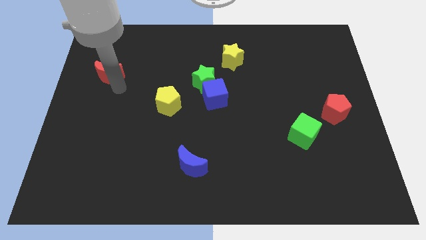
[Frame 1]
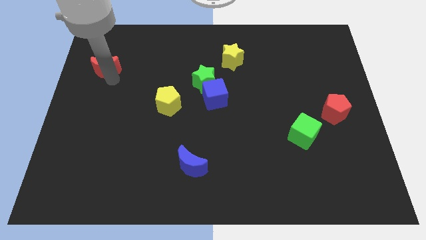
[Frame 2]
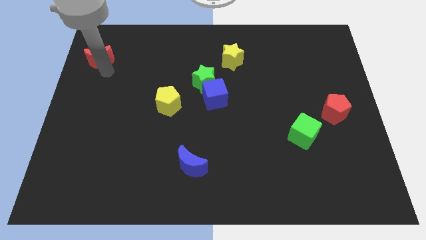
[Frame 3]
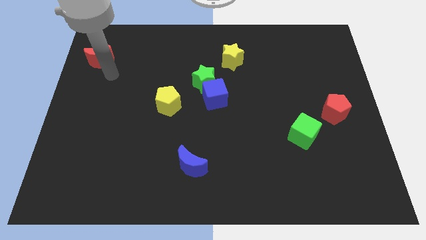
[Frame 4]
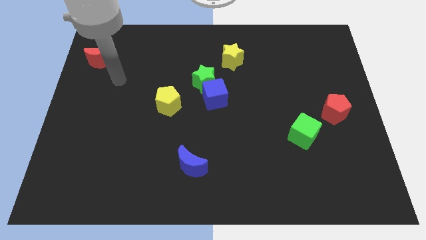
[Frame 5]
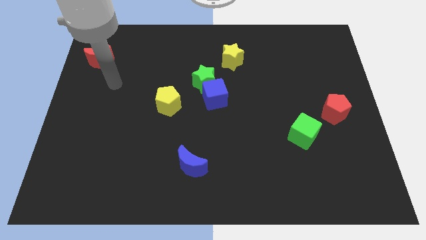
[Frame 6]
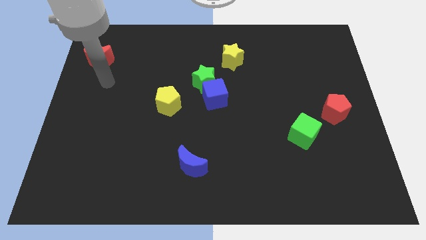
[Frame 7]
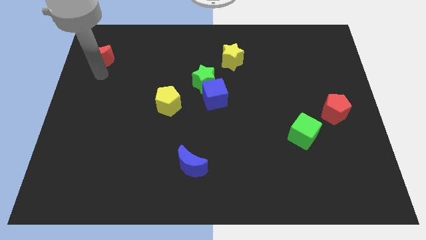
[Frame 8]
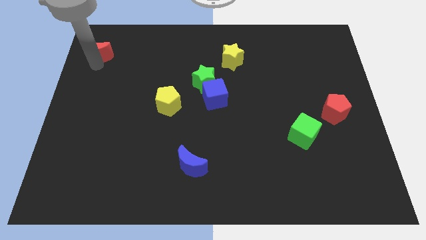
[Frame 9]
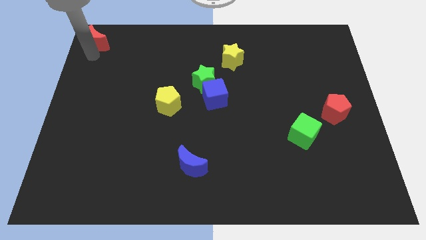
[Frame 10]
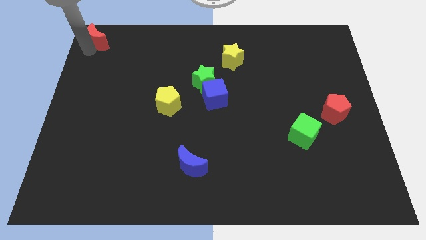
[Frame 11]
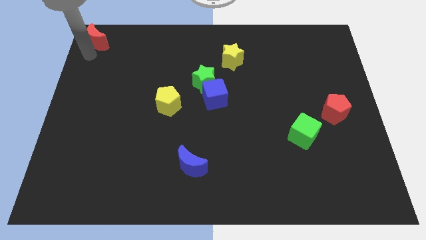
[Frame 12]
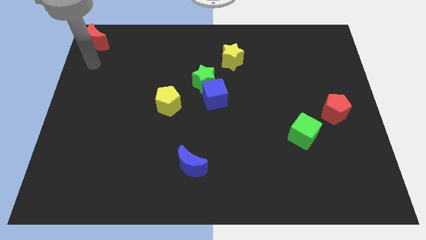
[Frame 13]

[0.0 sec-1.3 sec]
move the red moon to the left top

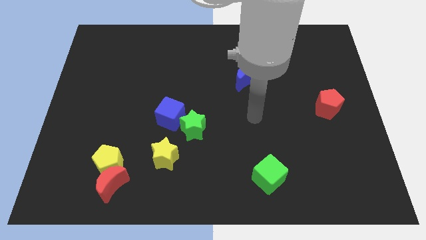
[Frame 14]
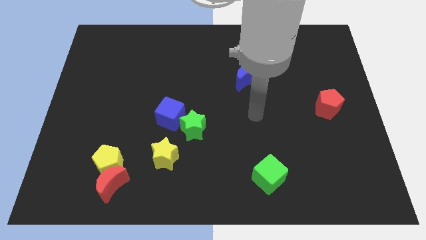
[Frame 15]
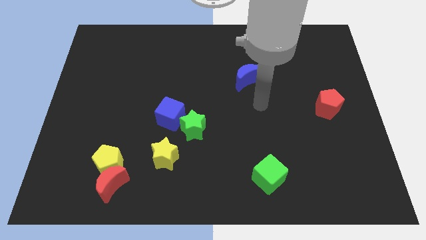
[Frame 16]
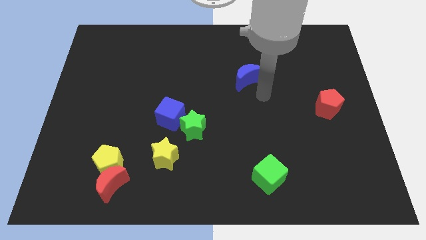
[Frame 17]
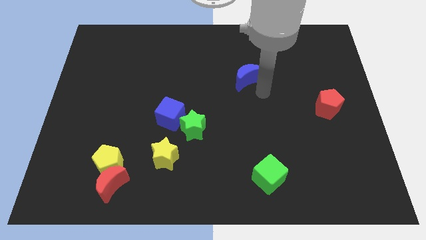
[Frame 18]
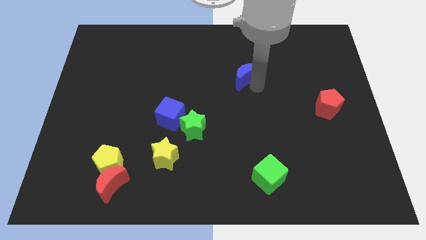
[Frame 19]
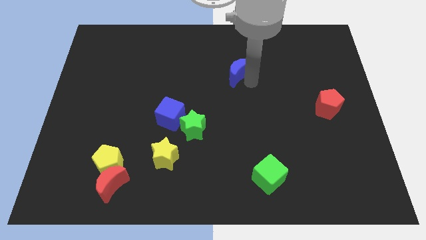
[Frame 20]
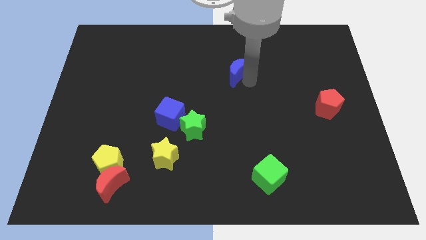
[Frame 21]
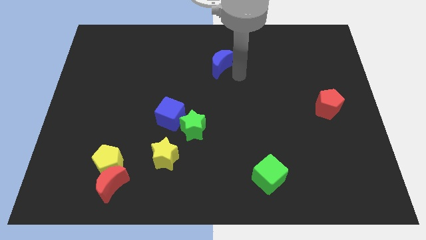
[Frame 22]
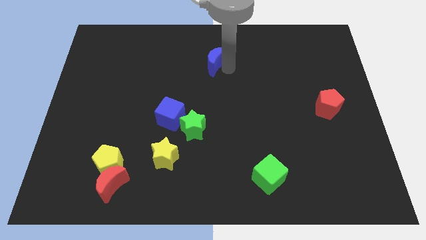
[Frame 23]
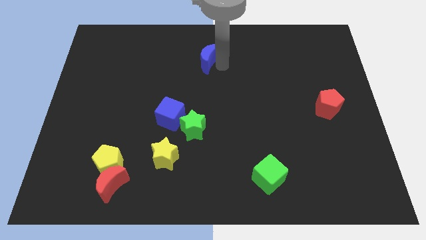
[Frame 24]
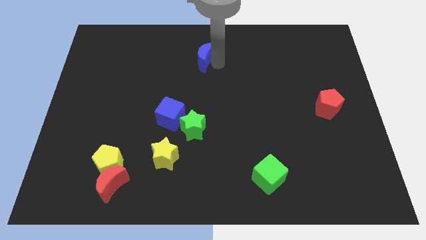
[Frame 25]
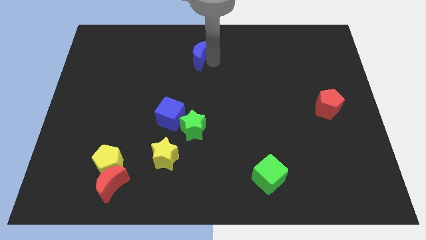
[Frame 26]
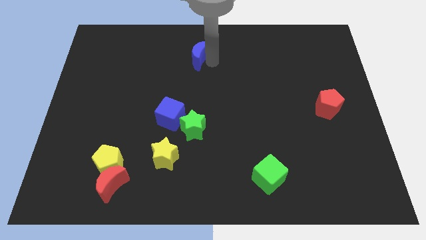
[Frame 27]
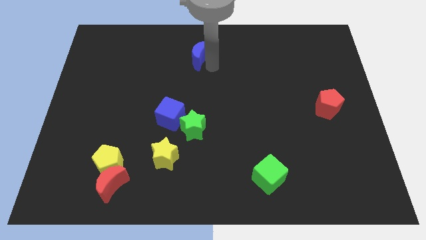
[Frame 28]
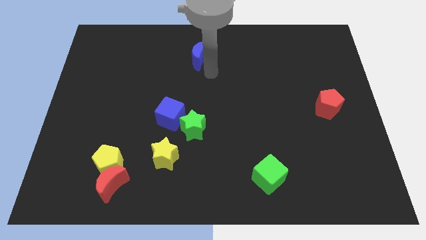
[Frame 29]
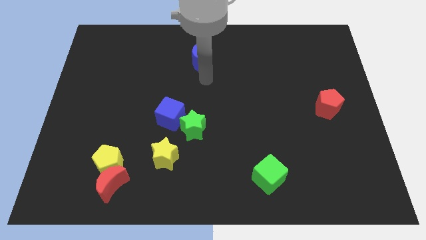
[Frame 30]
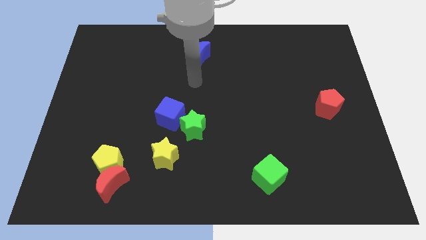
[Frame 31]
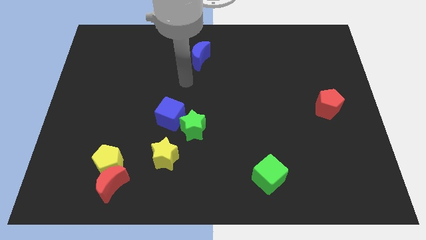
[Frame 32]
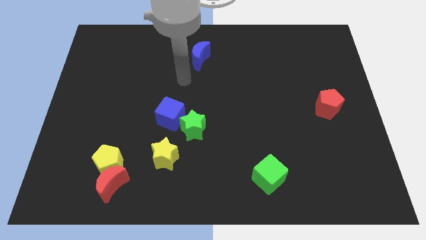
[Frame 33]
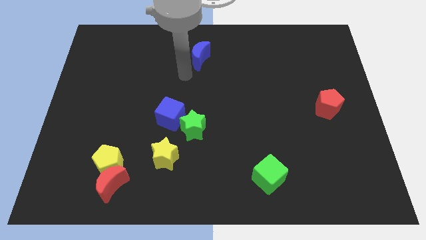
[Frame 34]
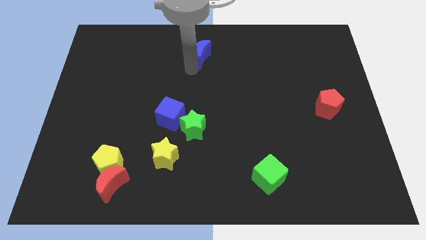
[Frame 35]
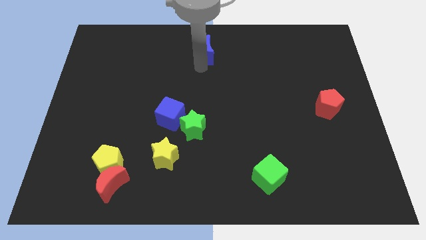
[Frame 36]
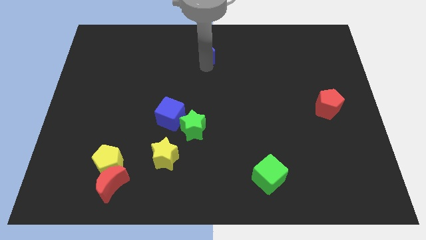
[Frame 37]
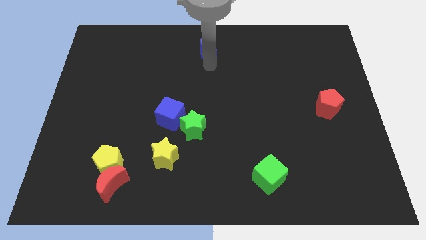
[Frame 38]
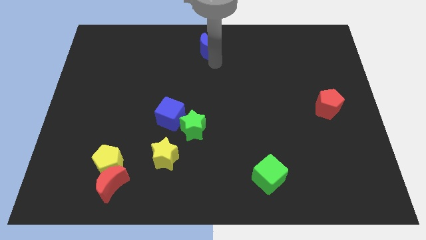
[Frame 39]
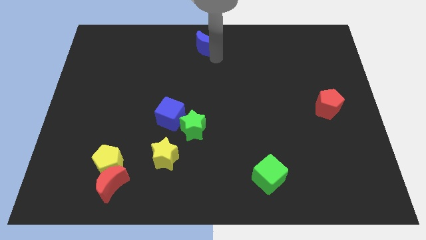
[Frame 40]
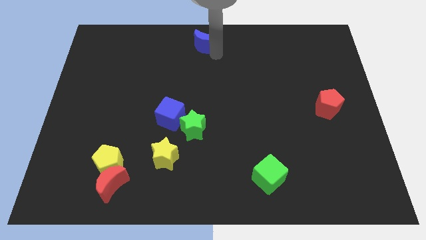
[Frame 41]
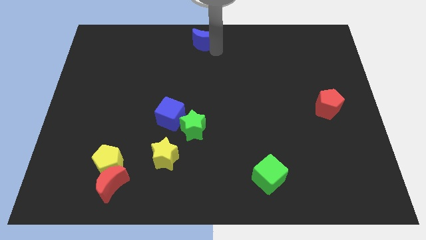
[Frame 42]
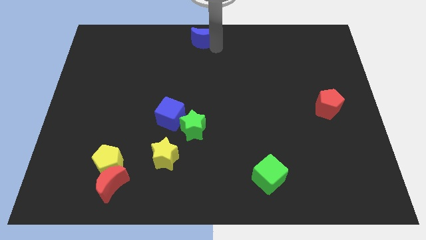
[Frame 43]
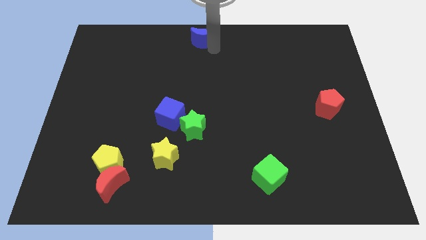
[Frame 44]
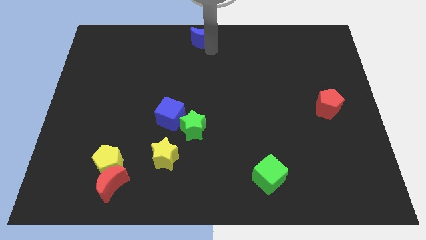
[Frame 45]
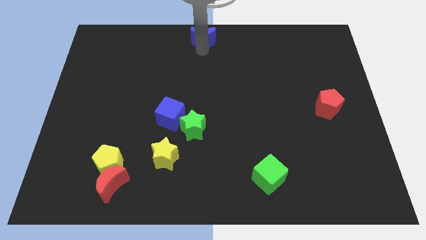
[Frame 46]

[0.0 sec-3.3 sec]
put the blue moon vertically at the top side of the green star

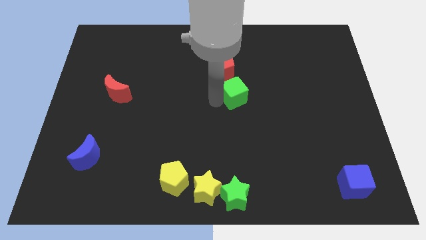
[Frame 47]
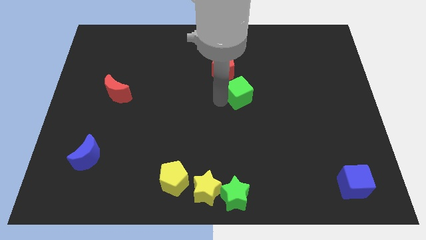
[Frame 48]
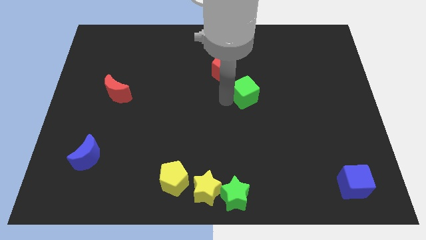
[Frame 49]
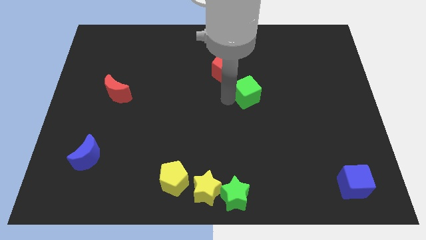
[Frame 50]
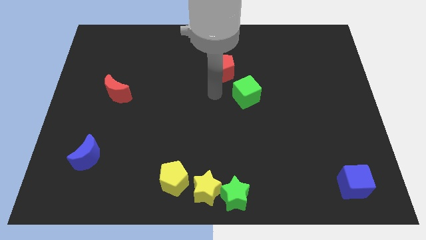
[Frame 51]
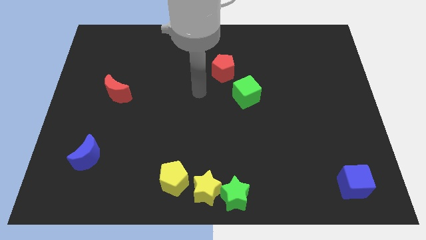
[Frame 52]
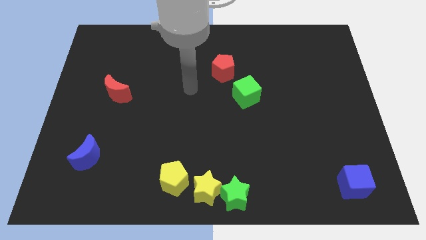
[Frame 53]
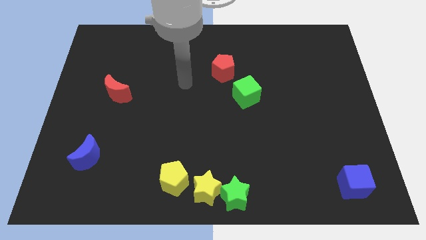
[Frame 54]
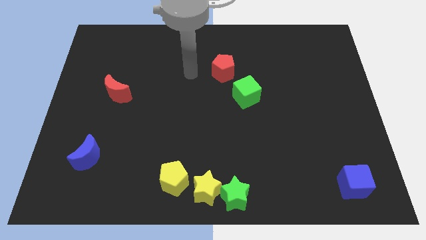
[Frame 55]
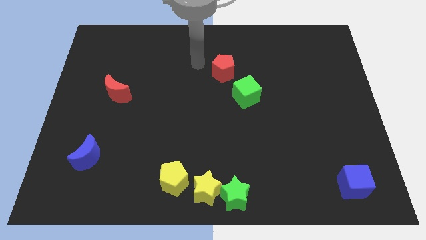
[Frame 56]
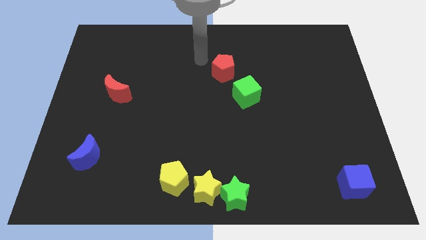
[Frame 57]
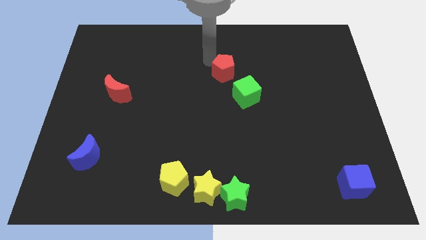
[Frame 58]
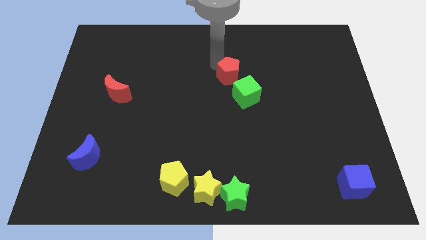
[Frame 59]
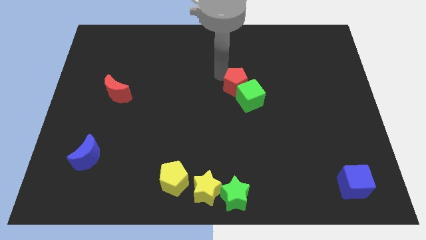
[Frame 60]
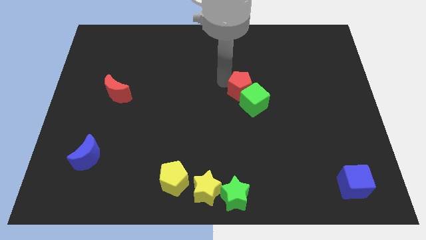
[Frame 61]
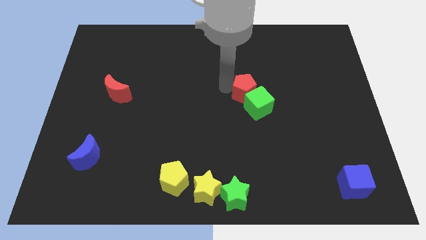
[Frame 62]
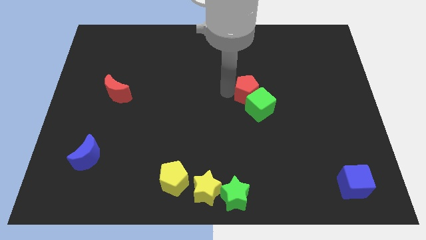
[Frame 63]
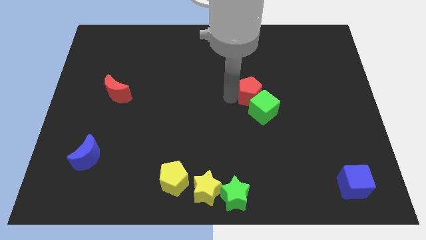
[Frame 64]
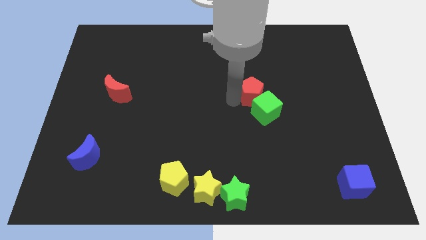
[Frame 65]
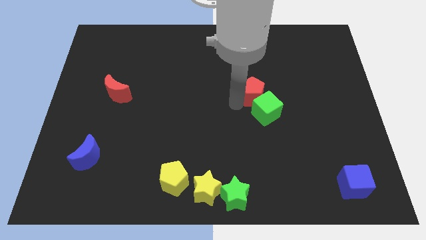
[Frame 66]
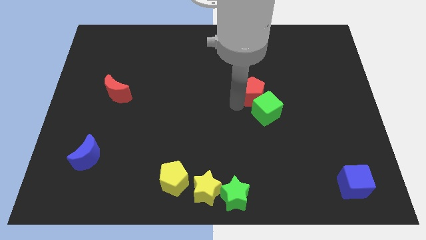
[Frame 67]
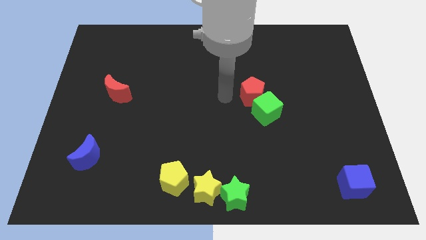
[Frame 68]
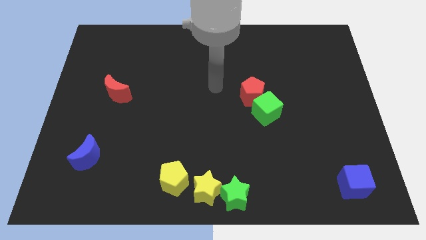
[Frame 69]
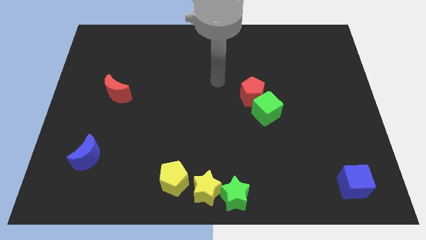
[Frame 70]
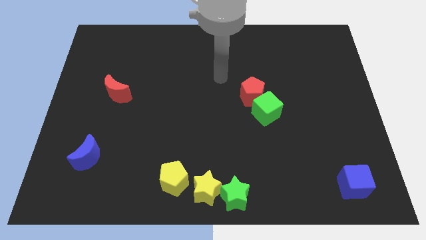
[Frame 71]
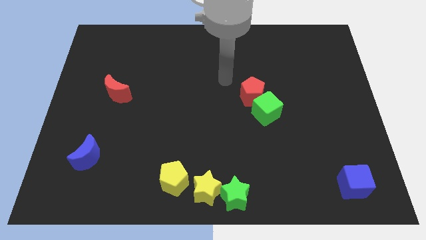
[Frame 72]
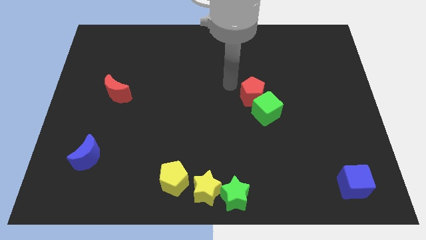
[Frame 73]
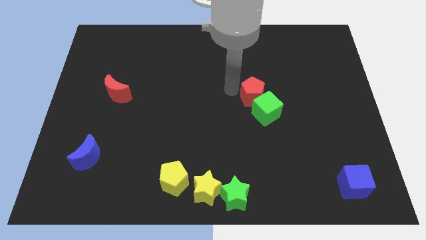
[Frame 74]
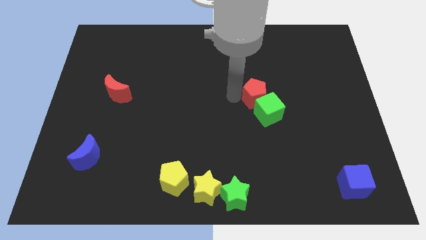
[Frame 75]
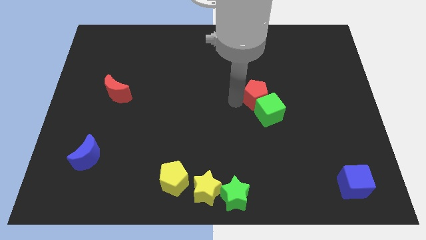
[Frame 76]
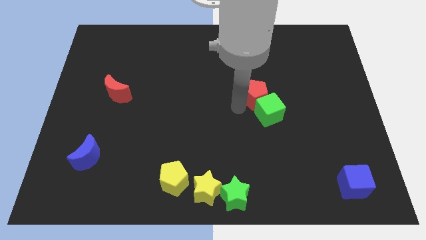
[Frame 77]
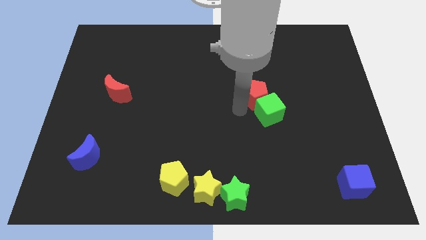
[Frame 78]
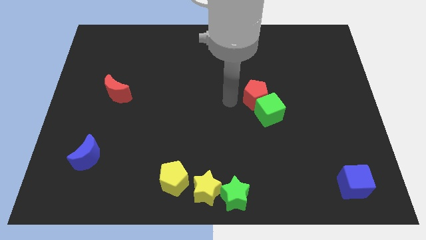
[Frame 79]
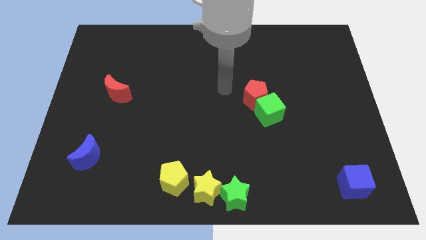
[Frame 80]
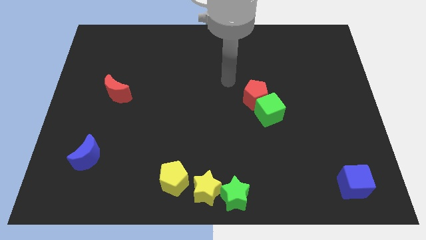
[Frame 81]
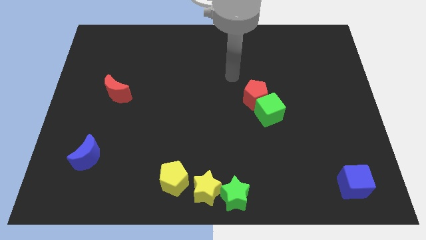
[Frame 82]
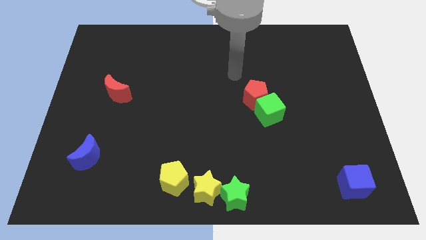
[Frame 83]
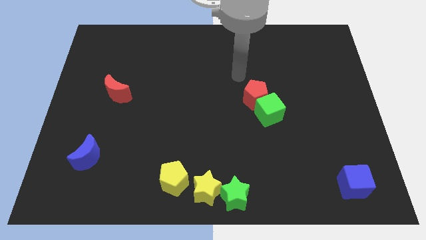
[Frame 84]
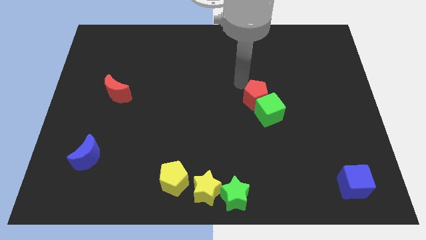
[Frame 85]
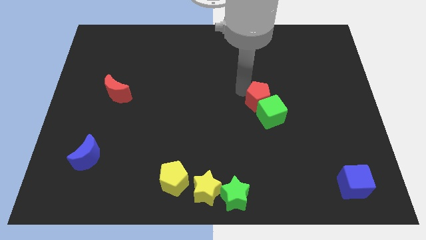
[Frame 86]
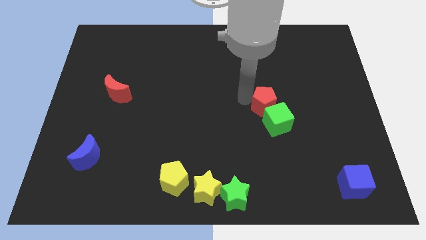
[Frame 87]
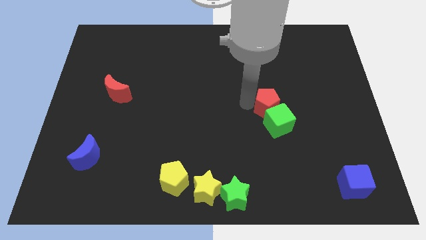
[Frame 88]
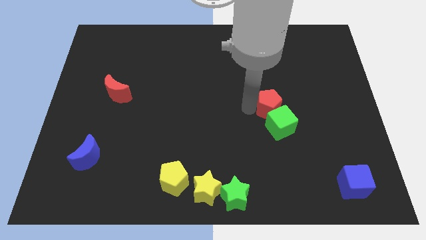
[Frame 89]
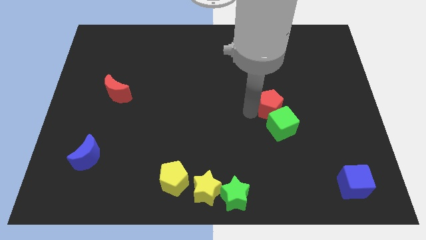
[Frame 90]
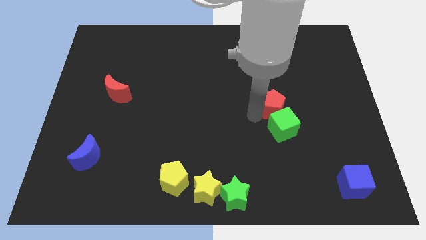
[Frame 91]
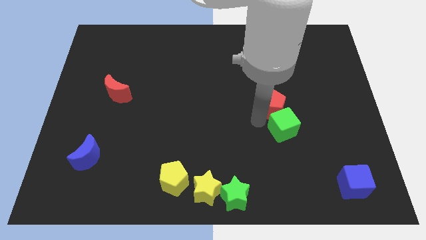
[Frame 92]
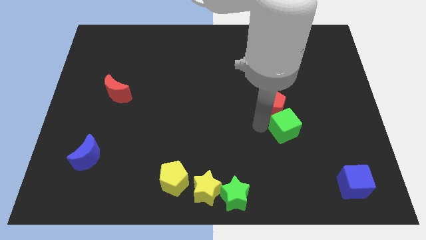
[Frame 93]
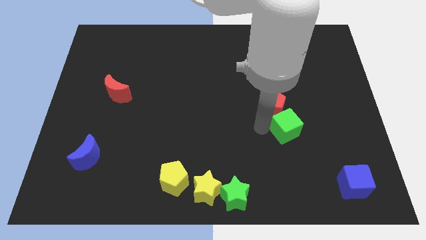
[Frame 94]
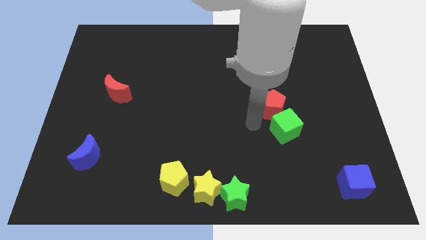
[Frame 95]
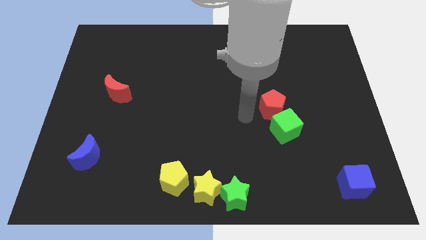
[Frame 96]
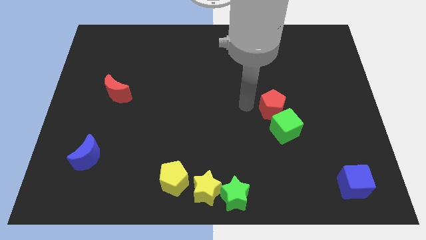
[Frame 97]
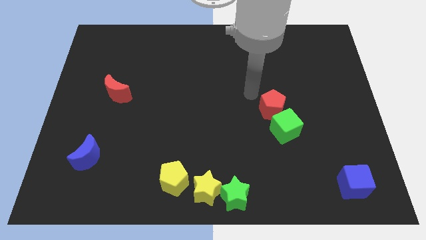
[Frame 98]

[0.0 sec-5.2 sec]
slide green cube and red pentagon towards bottom right of the board
